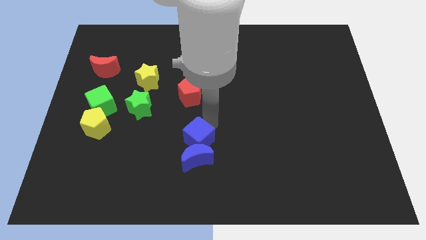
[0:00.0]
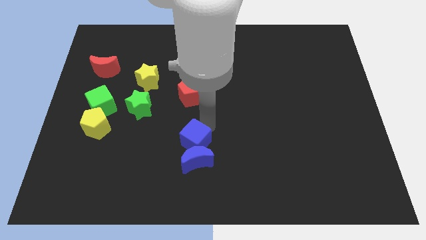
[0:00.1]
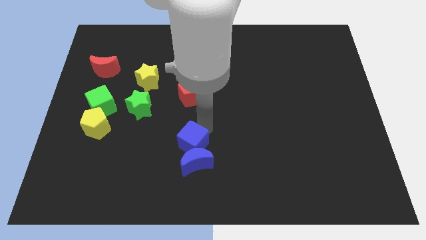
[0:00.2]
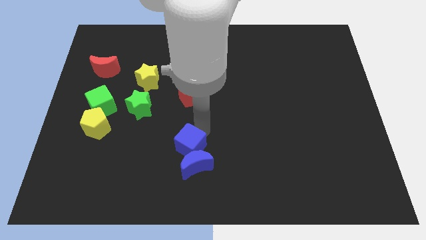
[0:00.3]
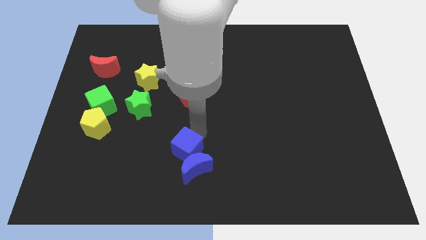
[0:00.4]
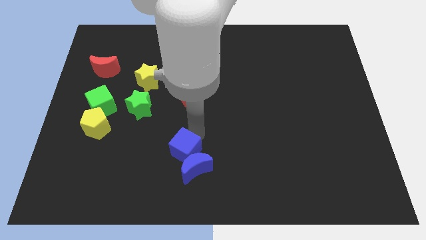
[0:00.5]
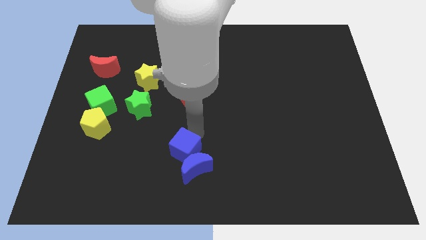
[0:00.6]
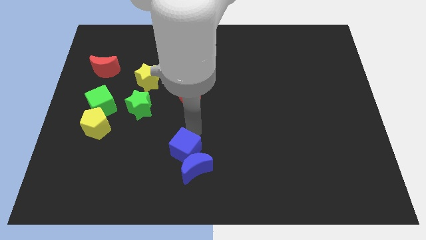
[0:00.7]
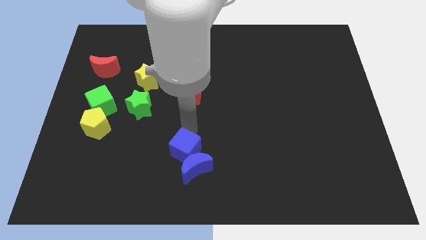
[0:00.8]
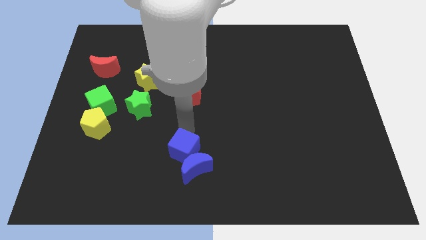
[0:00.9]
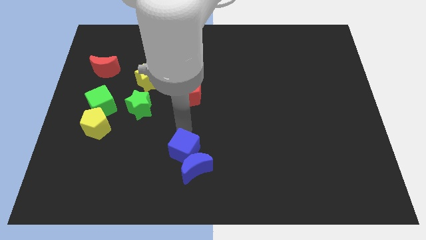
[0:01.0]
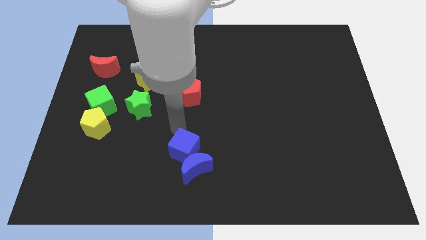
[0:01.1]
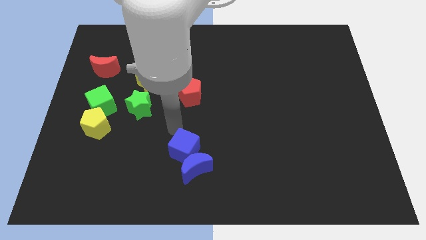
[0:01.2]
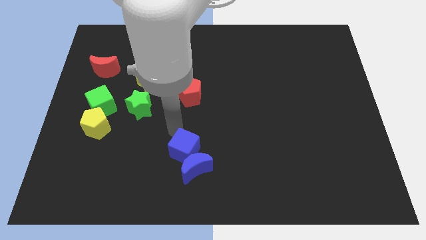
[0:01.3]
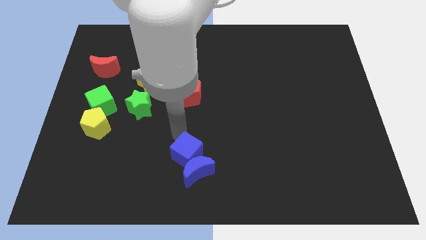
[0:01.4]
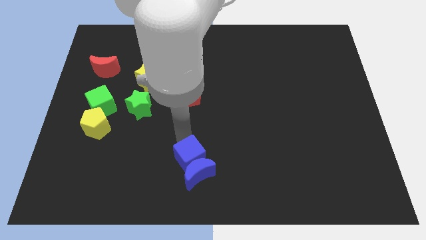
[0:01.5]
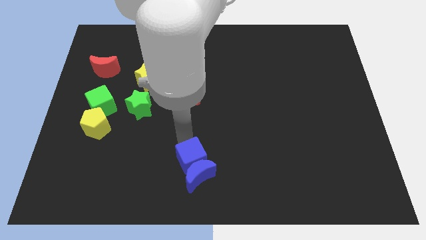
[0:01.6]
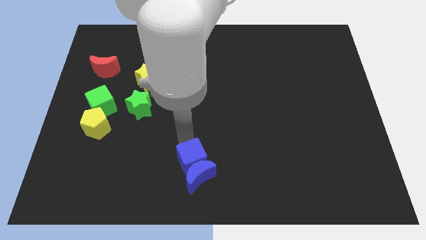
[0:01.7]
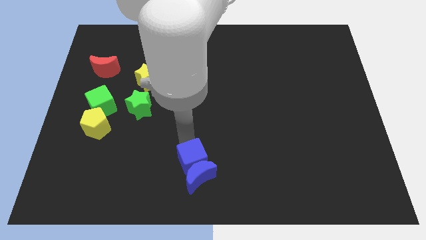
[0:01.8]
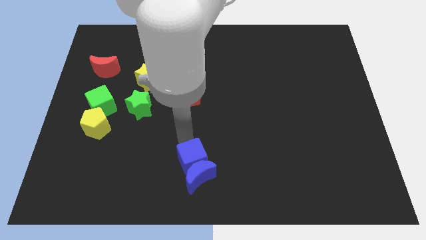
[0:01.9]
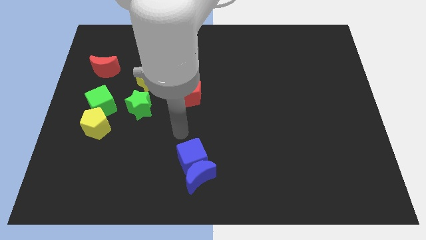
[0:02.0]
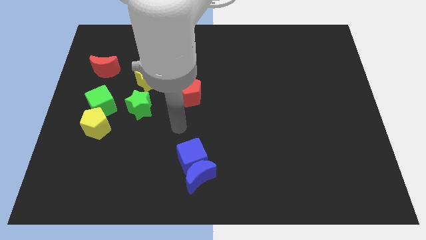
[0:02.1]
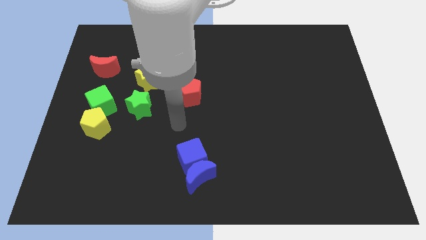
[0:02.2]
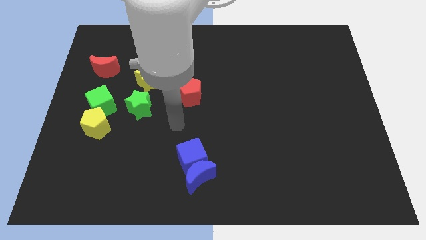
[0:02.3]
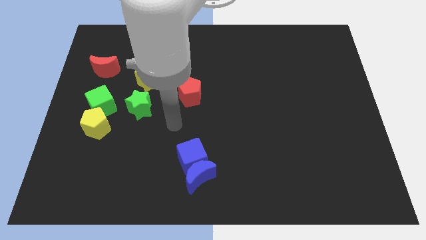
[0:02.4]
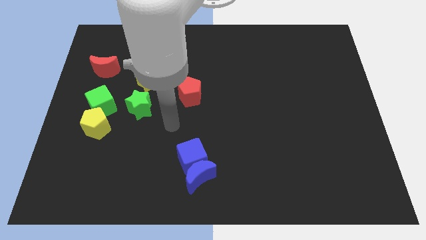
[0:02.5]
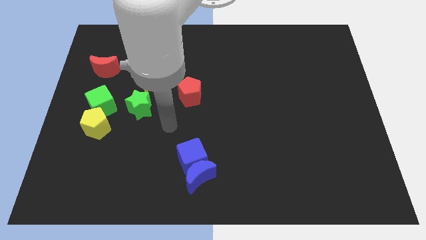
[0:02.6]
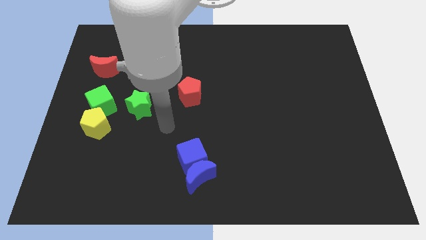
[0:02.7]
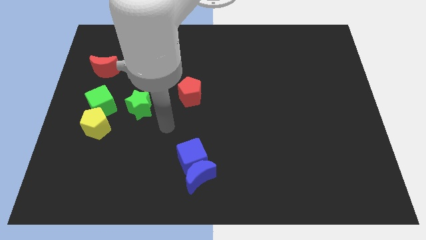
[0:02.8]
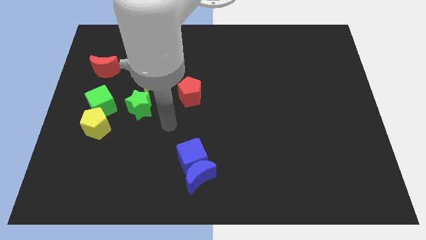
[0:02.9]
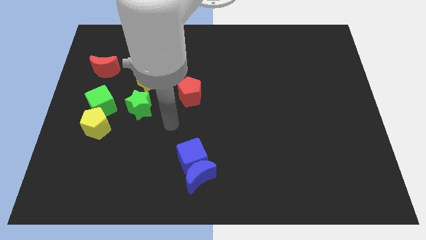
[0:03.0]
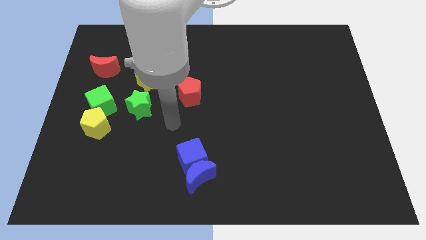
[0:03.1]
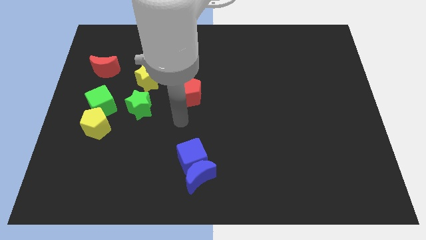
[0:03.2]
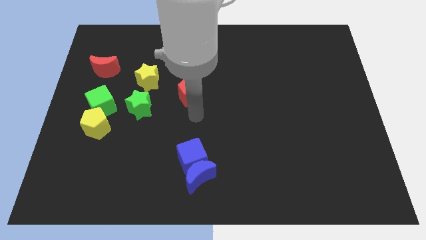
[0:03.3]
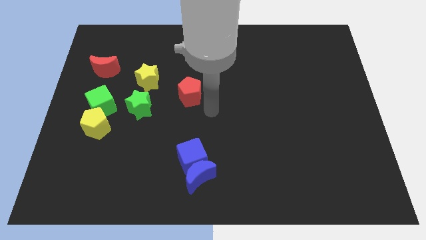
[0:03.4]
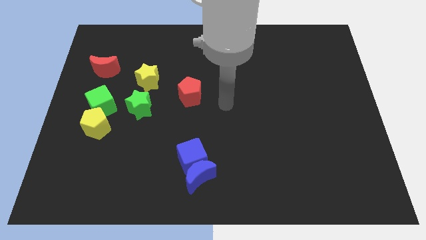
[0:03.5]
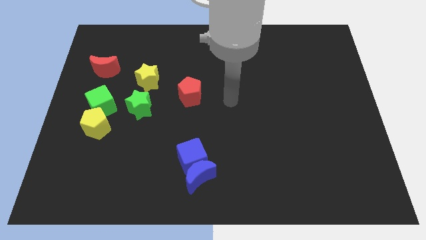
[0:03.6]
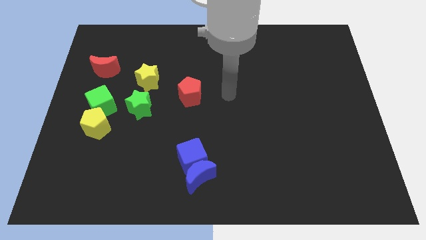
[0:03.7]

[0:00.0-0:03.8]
drag both the blue blocks towards the bottom center

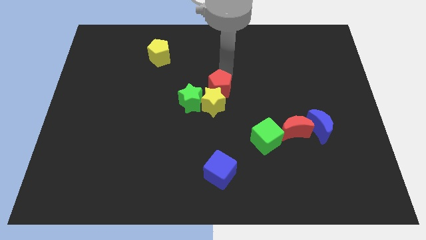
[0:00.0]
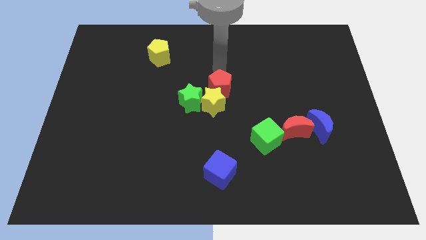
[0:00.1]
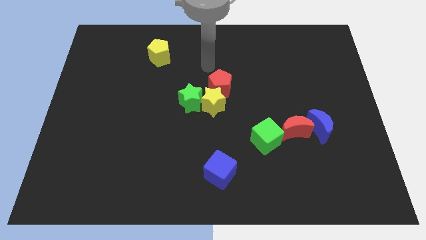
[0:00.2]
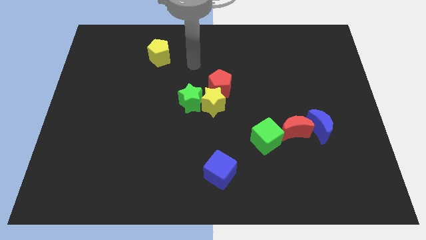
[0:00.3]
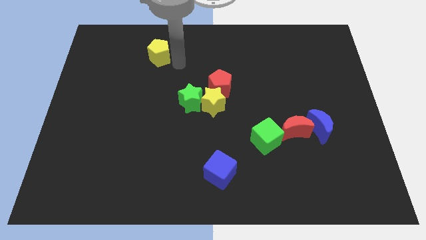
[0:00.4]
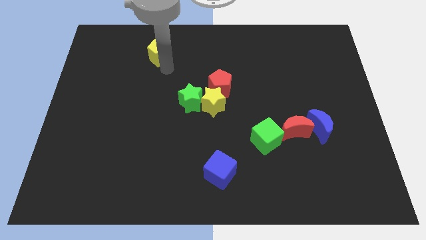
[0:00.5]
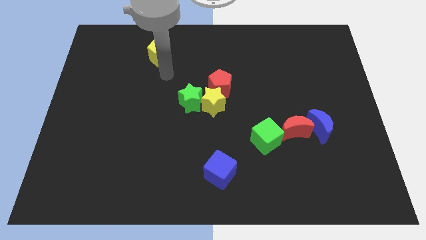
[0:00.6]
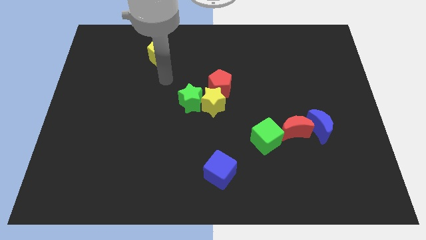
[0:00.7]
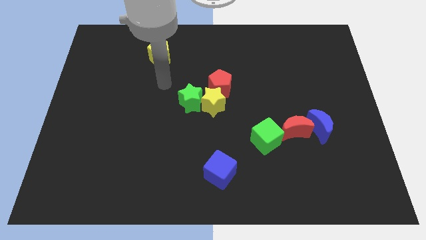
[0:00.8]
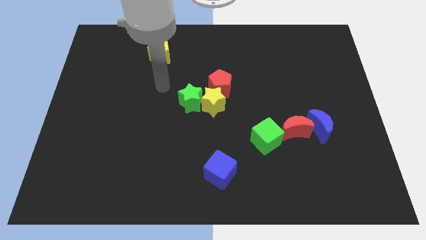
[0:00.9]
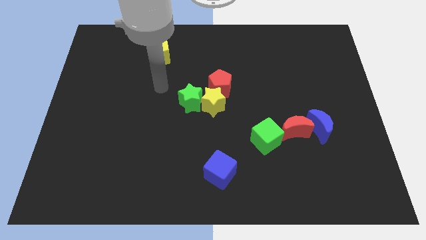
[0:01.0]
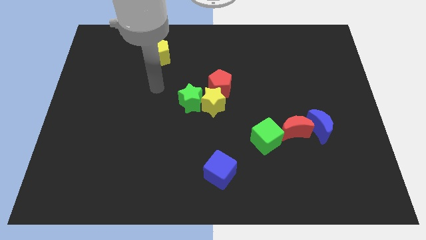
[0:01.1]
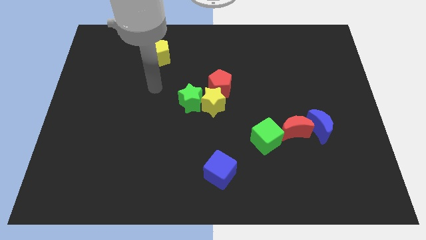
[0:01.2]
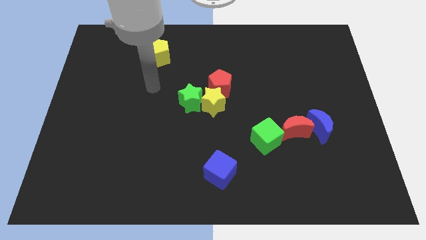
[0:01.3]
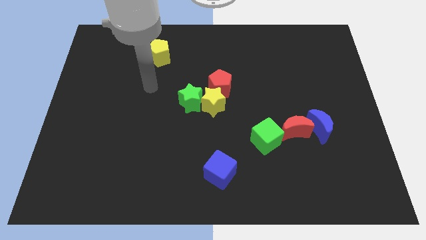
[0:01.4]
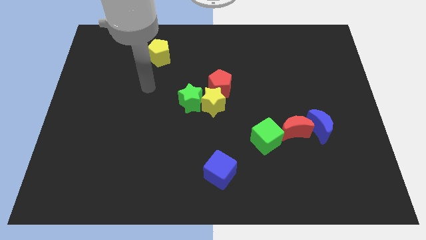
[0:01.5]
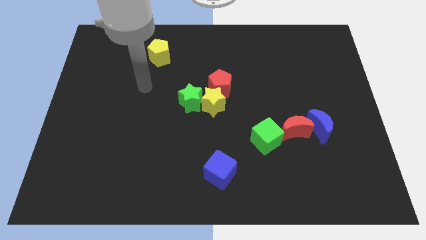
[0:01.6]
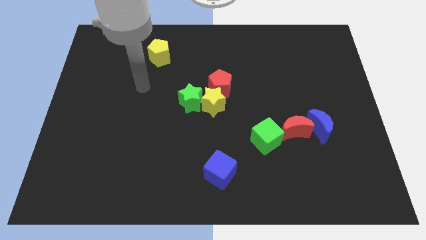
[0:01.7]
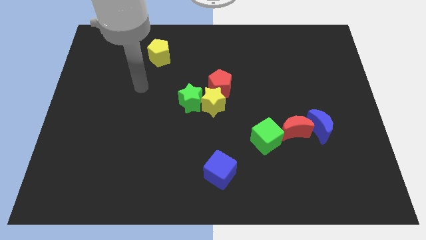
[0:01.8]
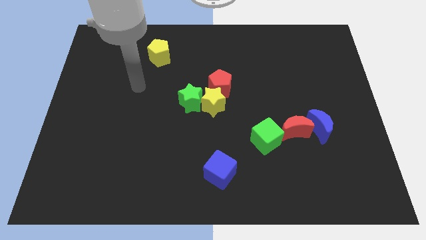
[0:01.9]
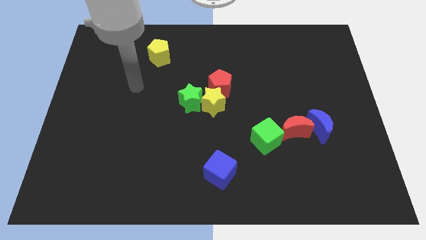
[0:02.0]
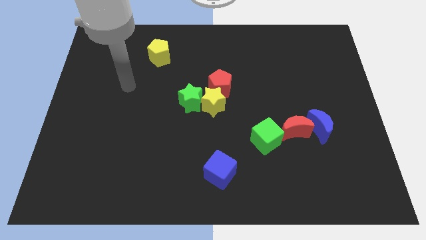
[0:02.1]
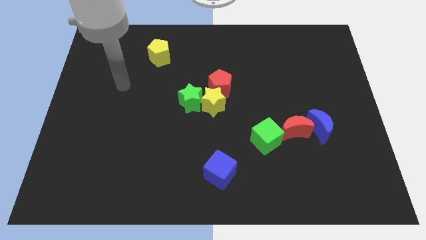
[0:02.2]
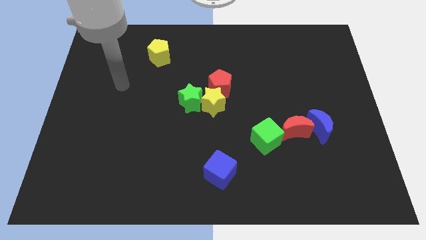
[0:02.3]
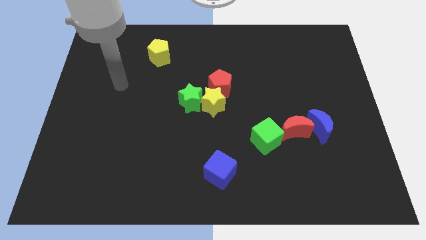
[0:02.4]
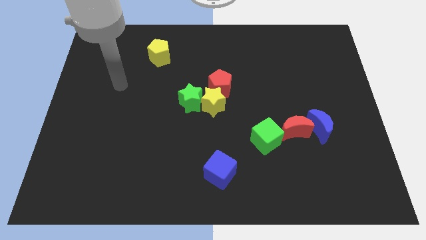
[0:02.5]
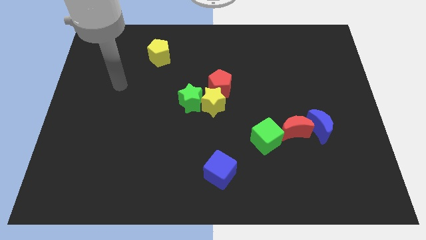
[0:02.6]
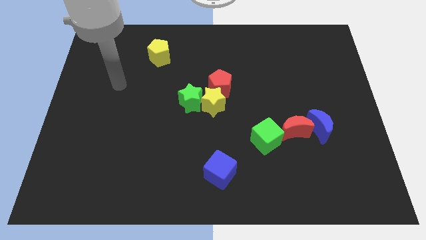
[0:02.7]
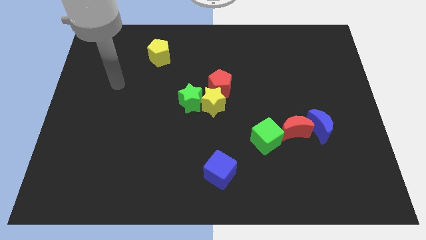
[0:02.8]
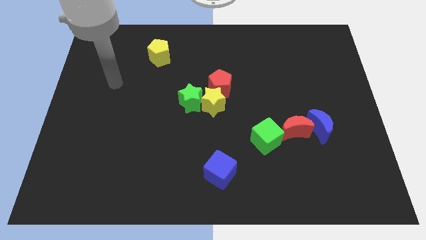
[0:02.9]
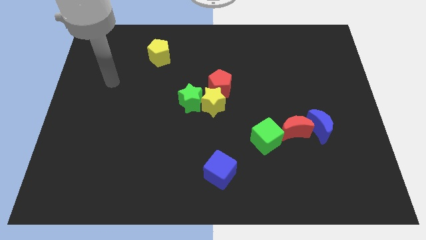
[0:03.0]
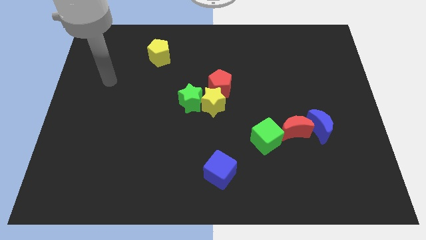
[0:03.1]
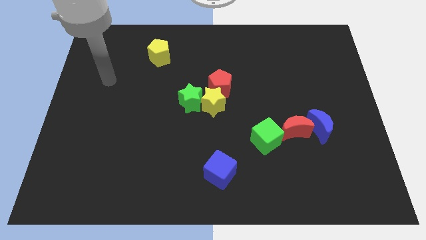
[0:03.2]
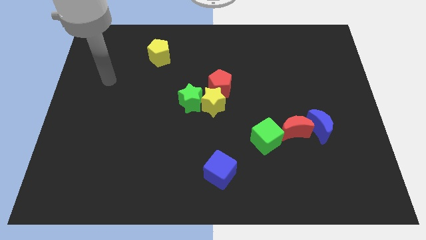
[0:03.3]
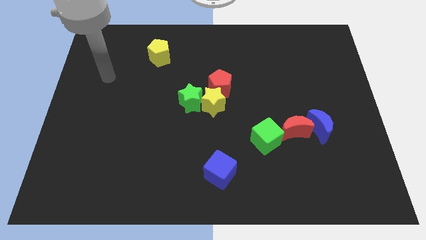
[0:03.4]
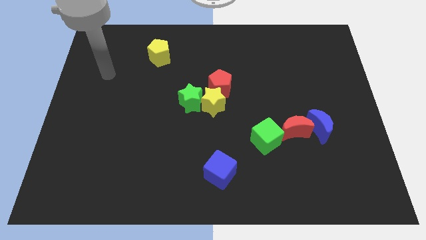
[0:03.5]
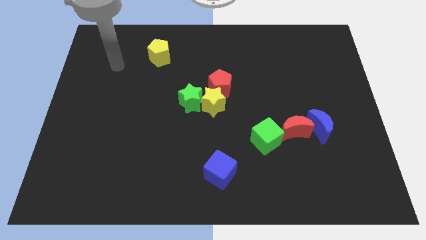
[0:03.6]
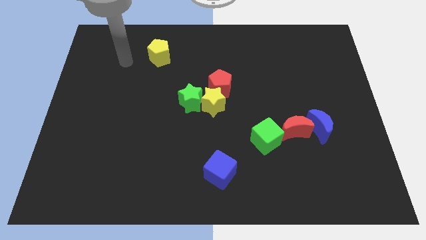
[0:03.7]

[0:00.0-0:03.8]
move your arm away from the red pentagon

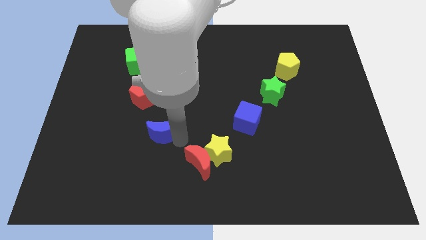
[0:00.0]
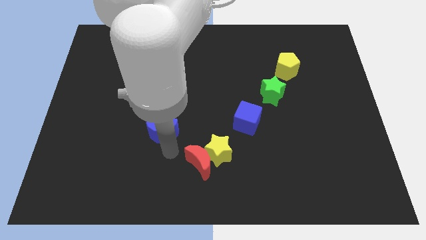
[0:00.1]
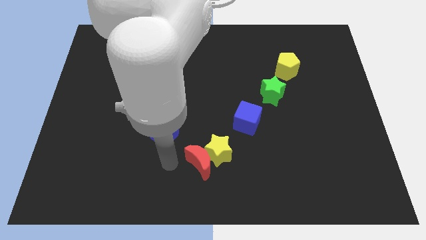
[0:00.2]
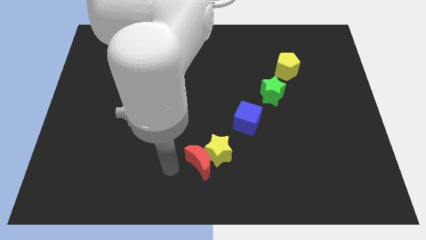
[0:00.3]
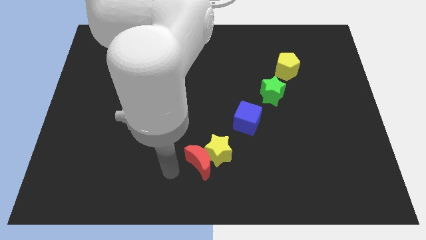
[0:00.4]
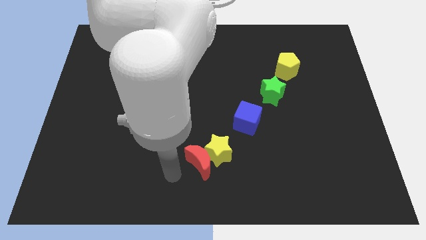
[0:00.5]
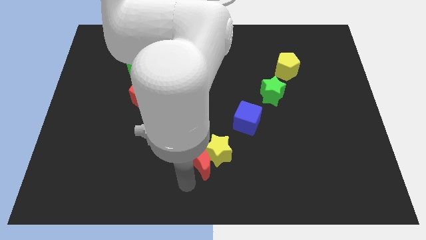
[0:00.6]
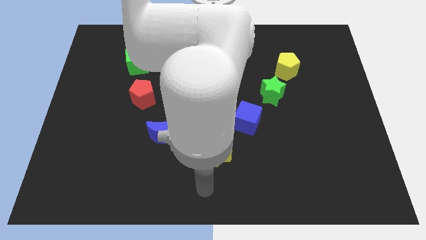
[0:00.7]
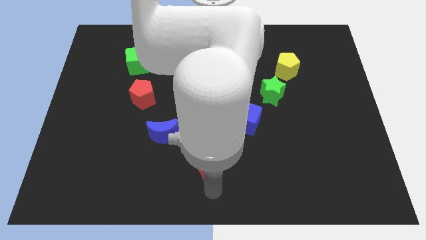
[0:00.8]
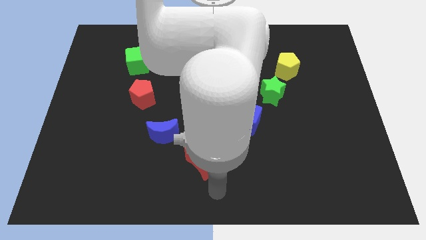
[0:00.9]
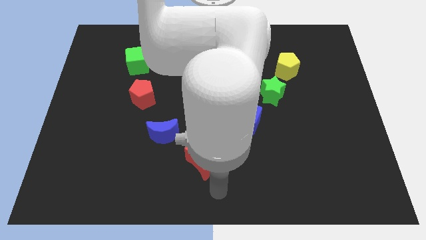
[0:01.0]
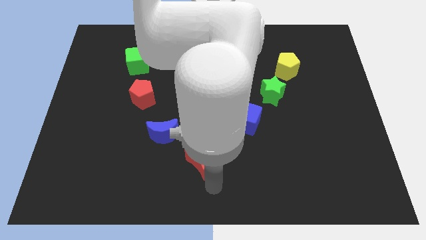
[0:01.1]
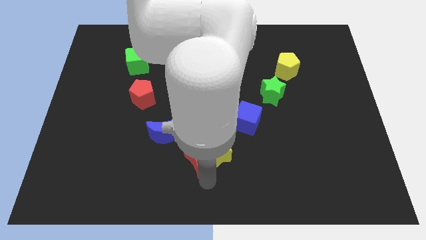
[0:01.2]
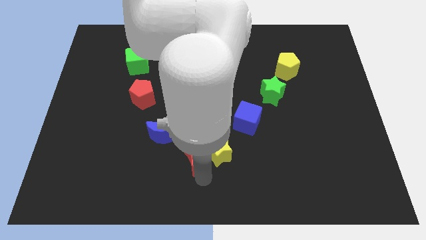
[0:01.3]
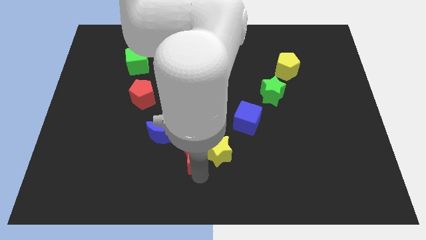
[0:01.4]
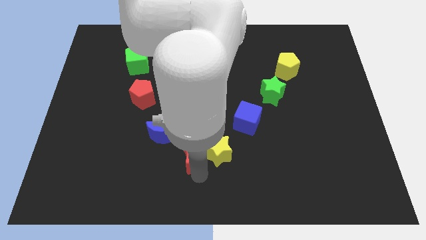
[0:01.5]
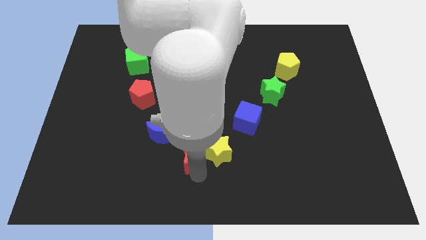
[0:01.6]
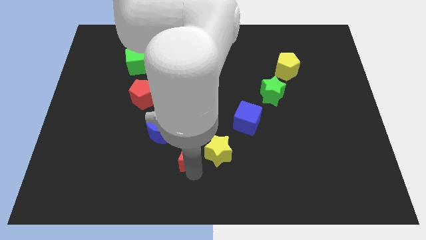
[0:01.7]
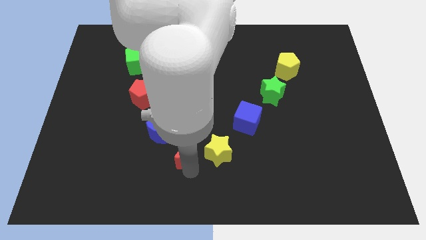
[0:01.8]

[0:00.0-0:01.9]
slide the red moon to the left side of the yellow star
